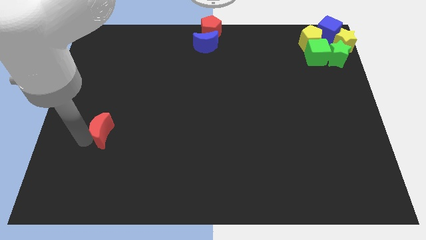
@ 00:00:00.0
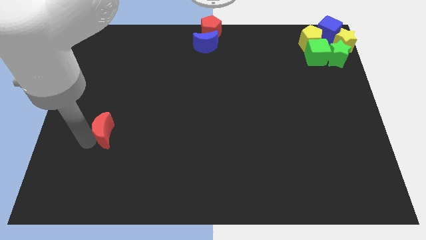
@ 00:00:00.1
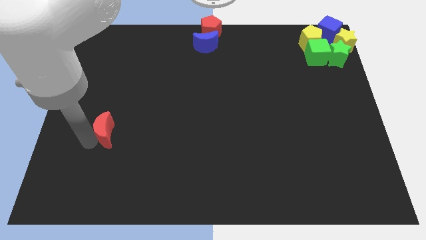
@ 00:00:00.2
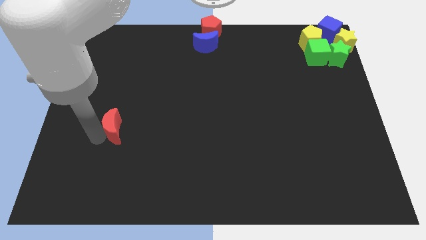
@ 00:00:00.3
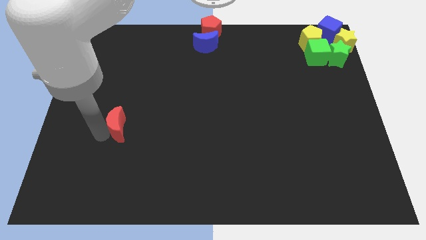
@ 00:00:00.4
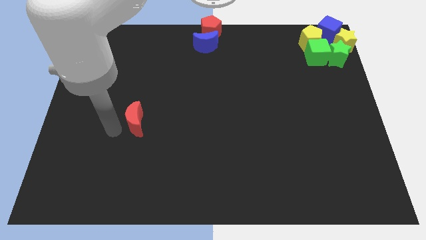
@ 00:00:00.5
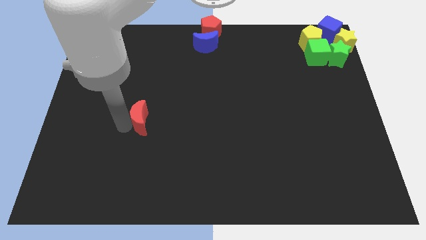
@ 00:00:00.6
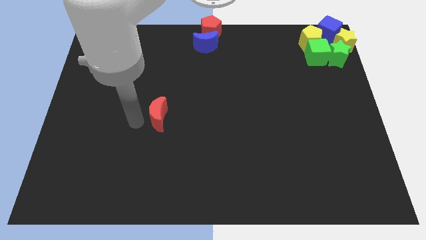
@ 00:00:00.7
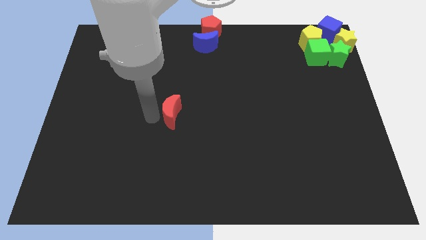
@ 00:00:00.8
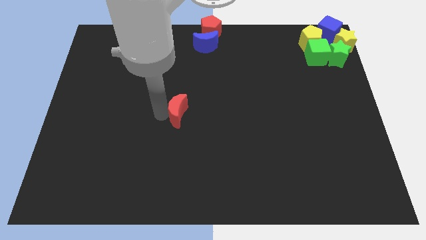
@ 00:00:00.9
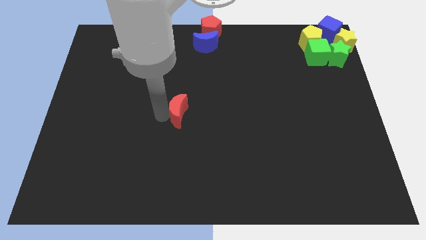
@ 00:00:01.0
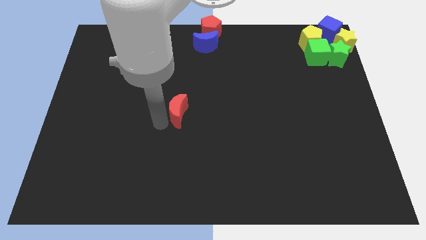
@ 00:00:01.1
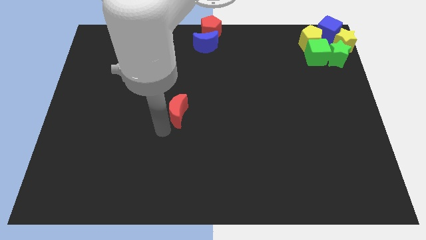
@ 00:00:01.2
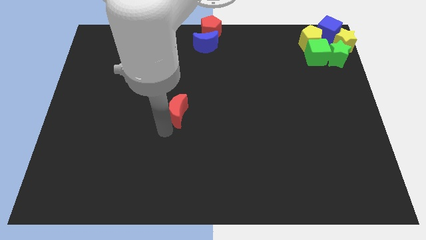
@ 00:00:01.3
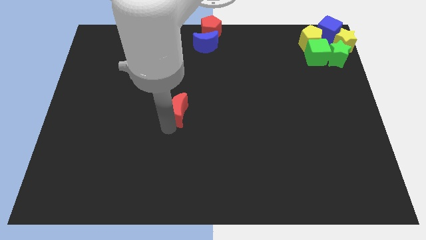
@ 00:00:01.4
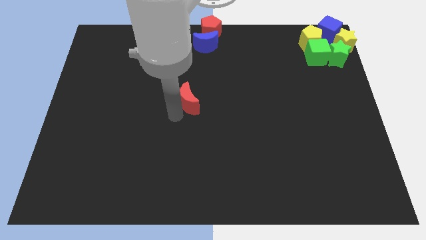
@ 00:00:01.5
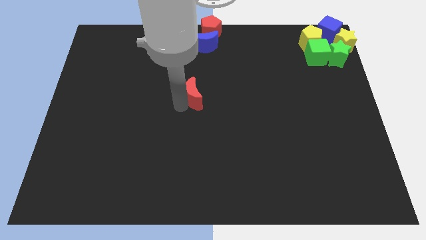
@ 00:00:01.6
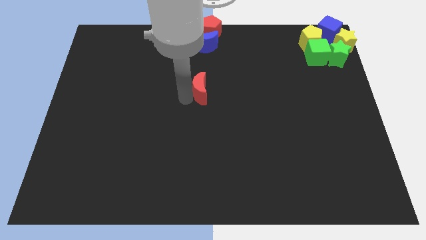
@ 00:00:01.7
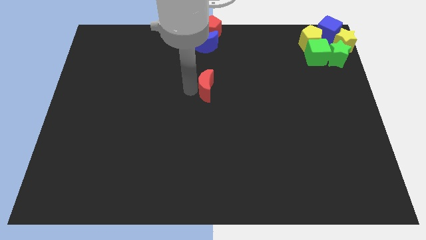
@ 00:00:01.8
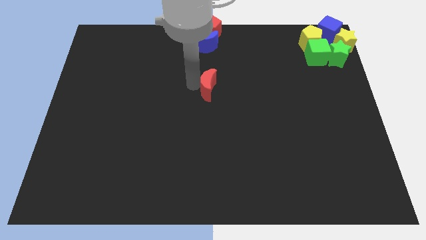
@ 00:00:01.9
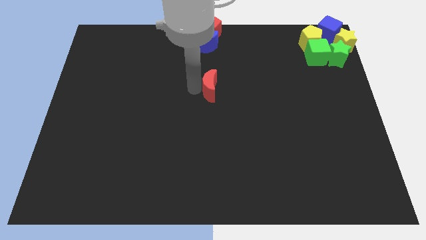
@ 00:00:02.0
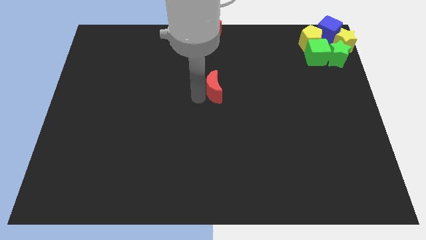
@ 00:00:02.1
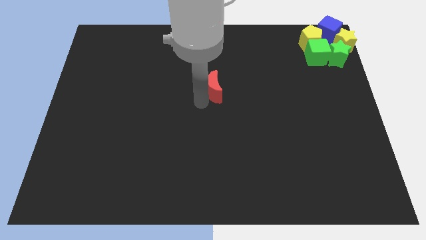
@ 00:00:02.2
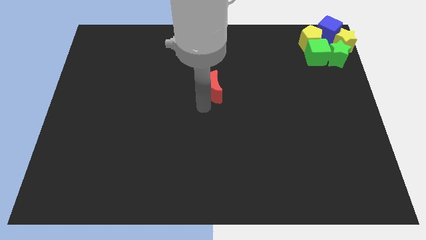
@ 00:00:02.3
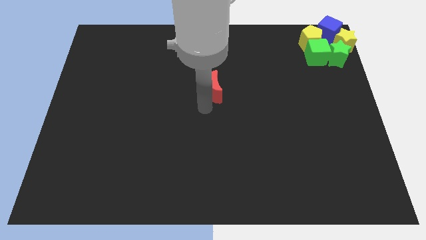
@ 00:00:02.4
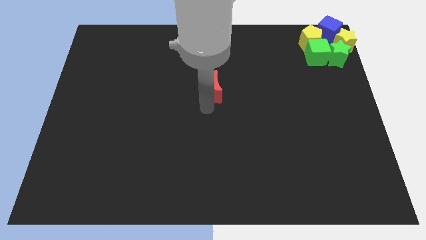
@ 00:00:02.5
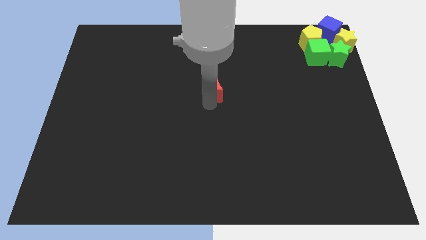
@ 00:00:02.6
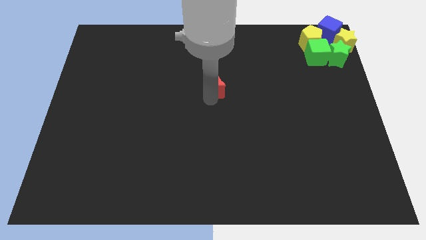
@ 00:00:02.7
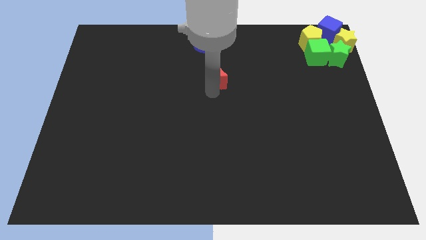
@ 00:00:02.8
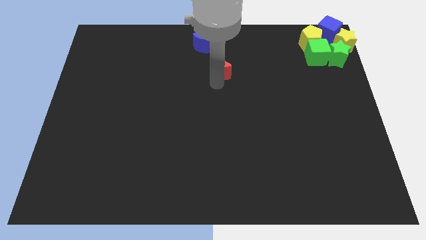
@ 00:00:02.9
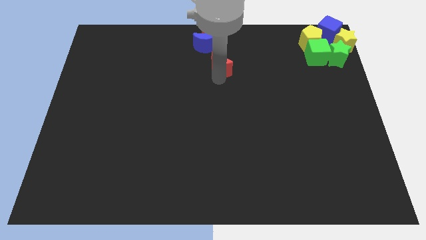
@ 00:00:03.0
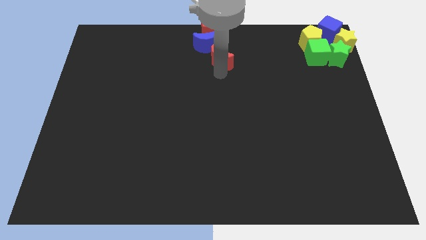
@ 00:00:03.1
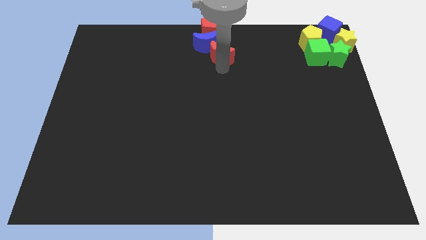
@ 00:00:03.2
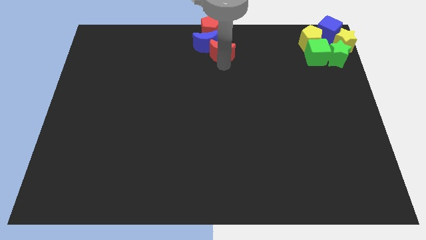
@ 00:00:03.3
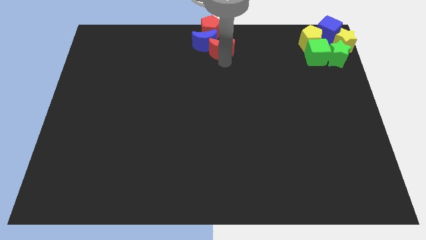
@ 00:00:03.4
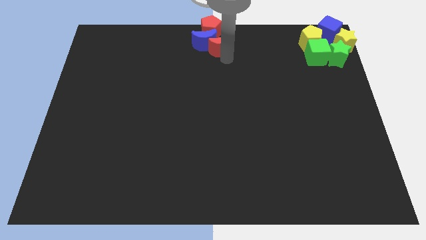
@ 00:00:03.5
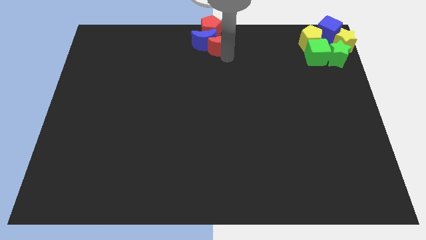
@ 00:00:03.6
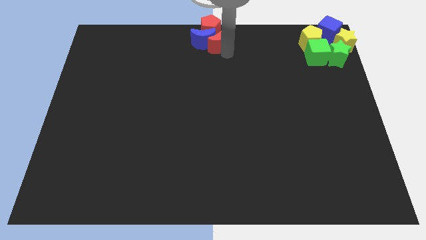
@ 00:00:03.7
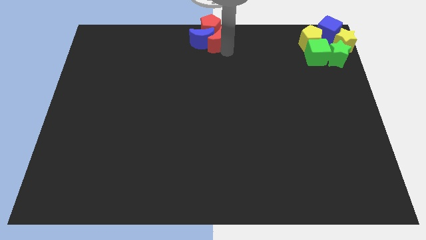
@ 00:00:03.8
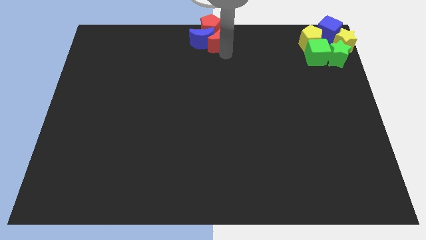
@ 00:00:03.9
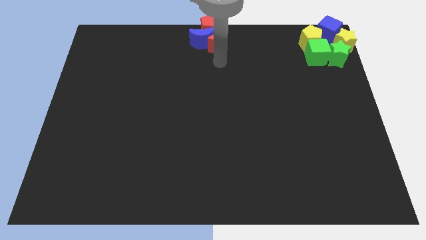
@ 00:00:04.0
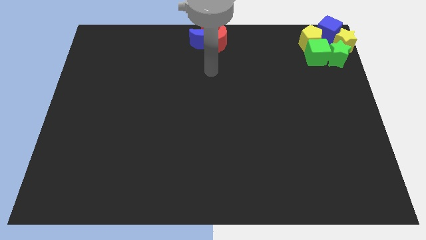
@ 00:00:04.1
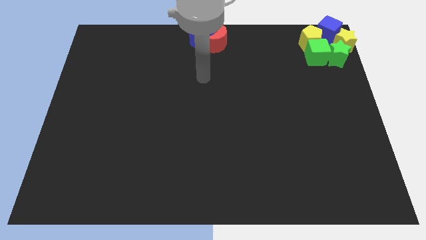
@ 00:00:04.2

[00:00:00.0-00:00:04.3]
push the red moon into red pentagon and blue moon

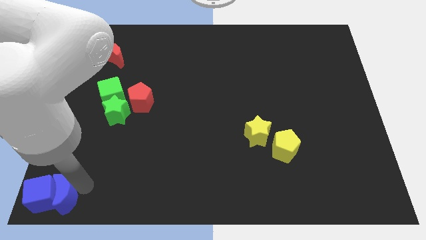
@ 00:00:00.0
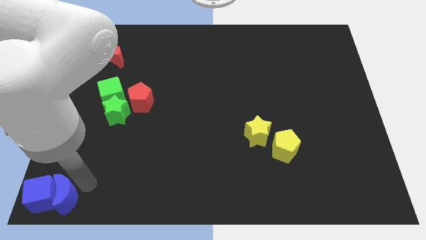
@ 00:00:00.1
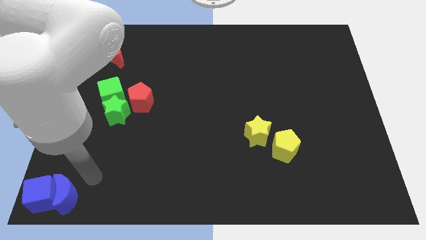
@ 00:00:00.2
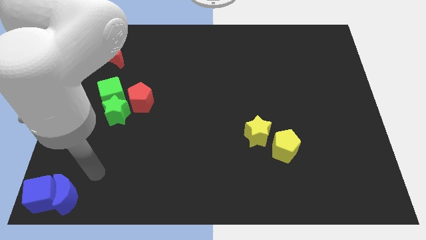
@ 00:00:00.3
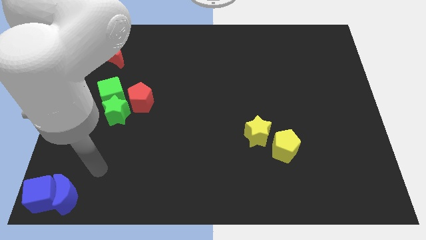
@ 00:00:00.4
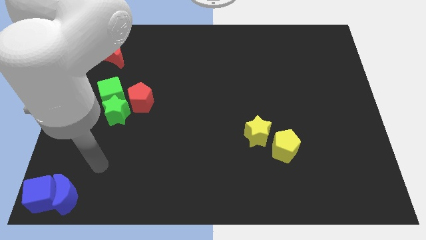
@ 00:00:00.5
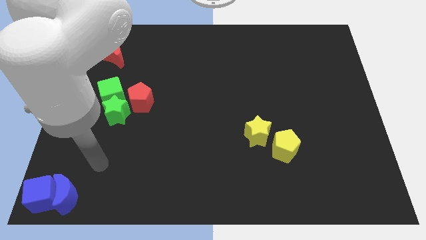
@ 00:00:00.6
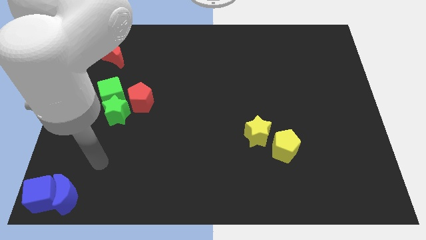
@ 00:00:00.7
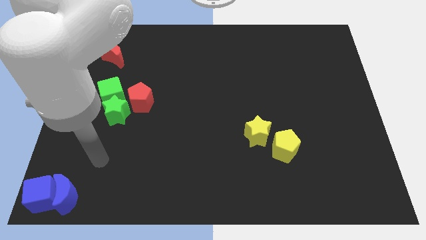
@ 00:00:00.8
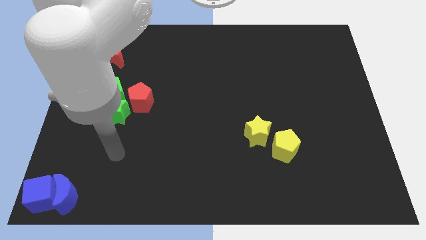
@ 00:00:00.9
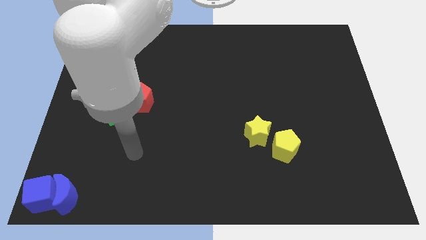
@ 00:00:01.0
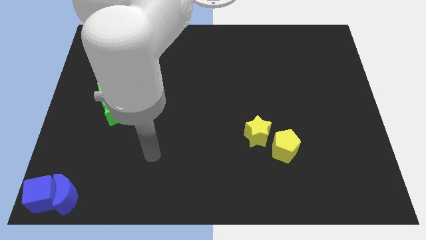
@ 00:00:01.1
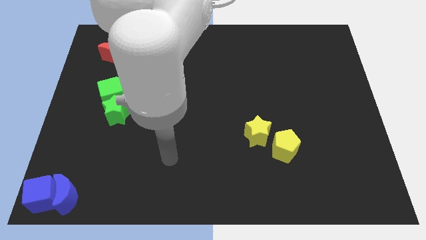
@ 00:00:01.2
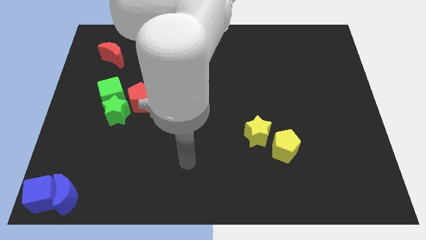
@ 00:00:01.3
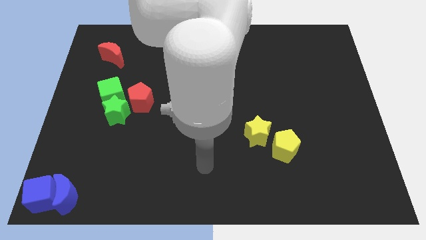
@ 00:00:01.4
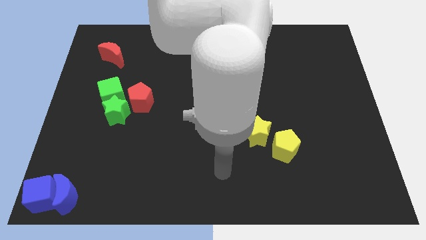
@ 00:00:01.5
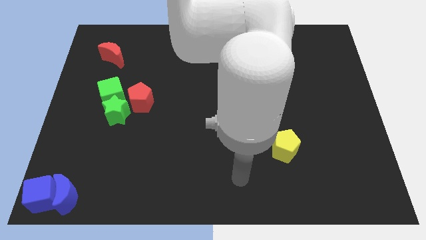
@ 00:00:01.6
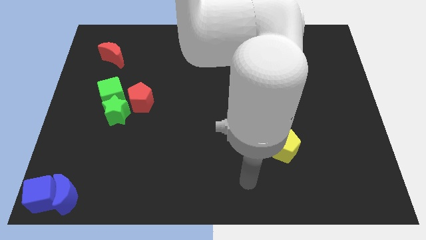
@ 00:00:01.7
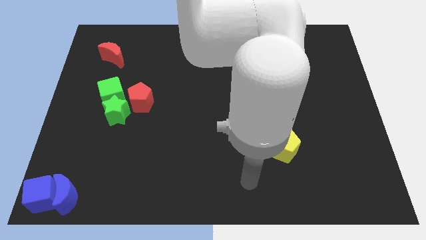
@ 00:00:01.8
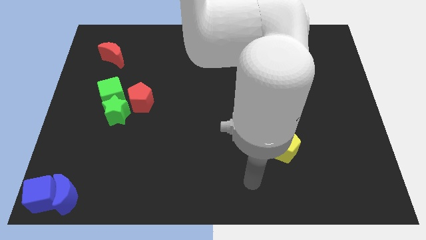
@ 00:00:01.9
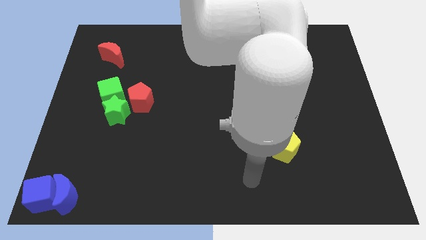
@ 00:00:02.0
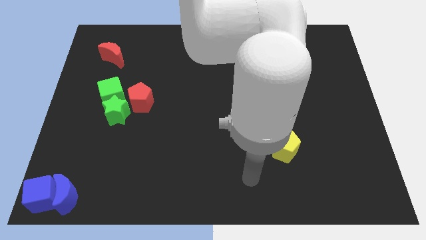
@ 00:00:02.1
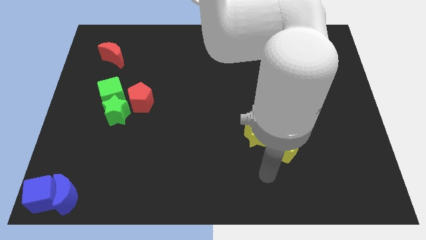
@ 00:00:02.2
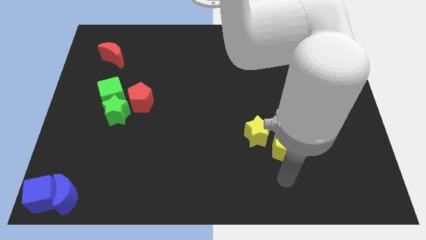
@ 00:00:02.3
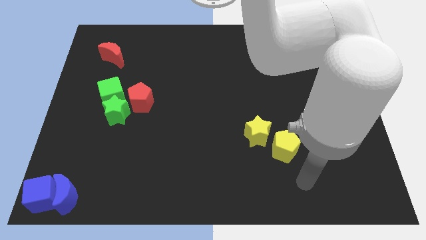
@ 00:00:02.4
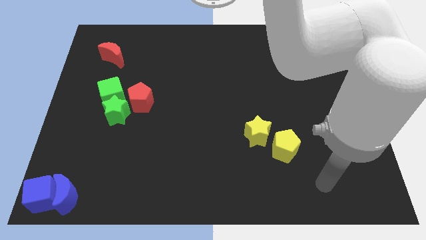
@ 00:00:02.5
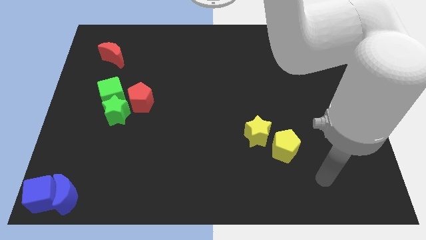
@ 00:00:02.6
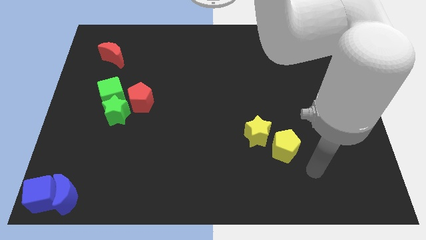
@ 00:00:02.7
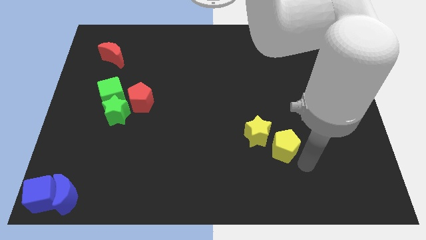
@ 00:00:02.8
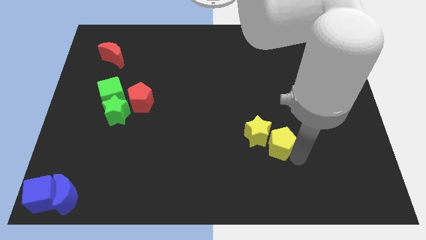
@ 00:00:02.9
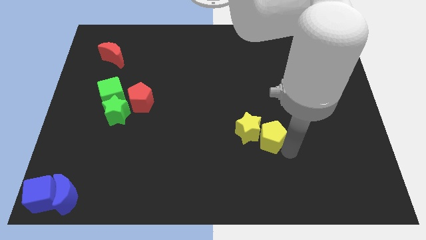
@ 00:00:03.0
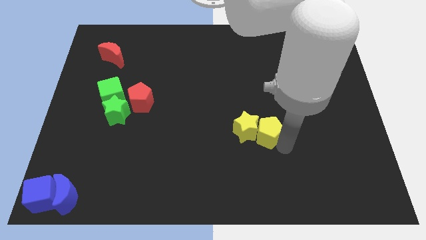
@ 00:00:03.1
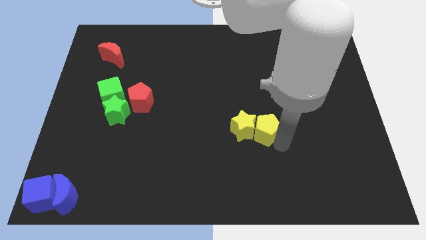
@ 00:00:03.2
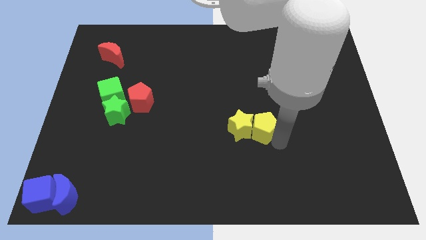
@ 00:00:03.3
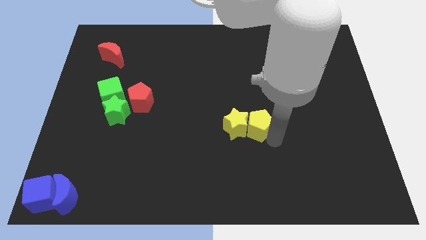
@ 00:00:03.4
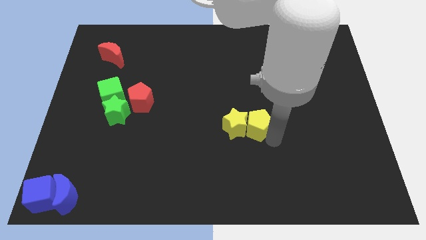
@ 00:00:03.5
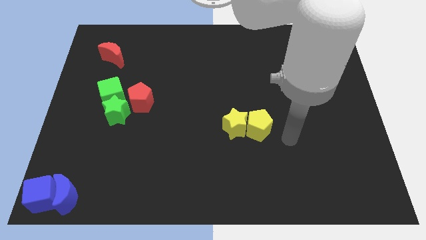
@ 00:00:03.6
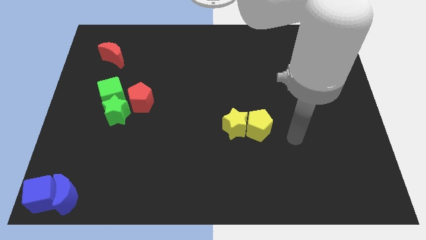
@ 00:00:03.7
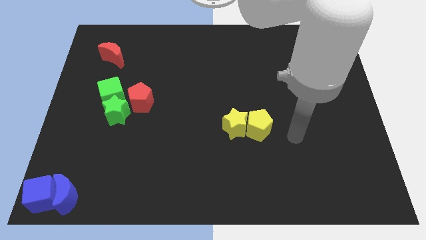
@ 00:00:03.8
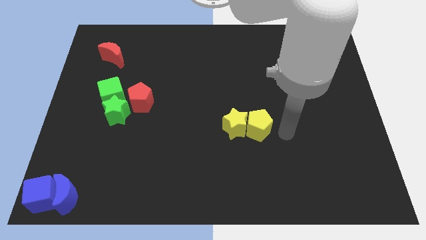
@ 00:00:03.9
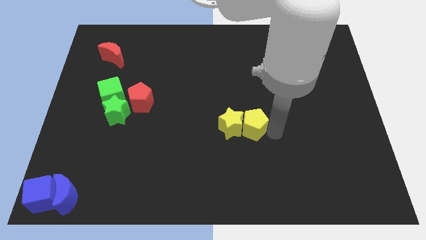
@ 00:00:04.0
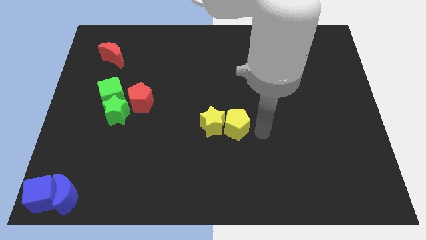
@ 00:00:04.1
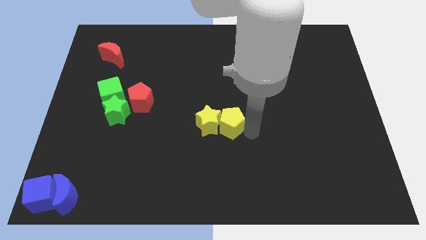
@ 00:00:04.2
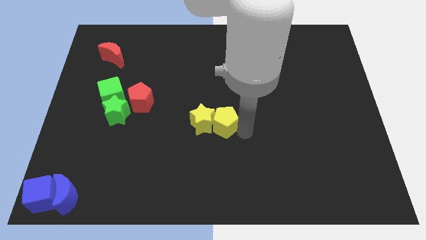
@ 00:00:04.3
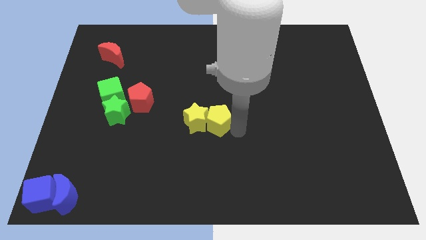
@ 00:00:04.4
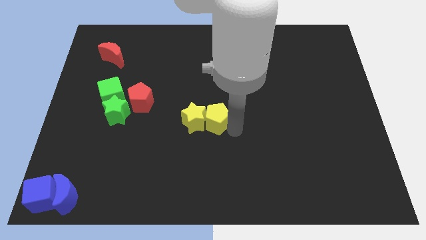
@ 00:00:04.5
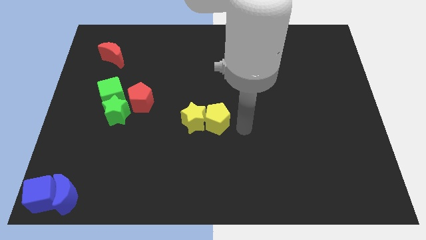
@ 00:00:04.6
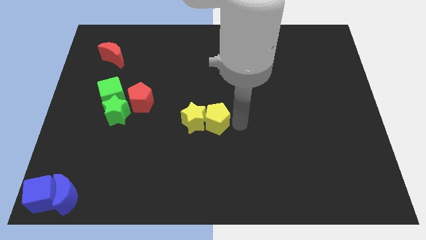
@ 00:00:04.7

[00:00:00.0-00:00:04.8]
slide the yellow blocks towards the right side of the red pentagon
